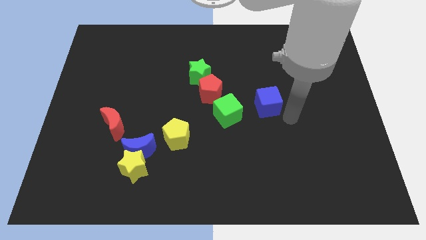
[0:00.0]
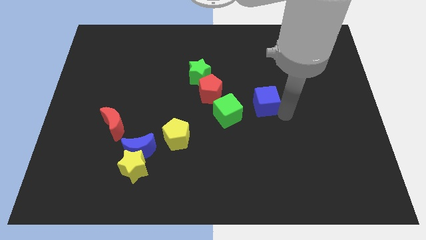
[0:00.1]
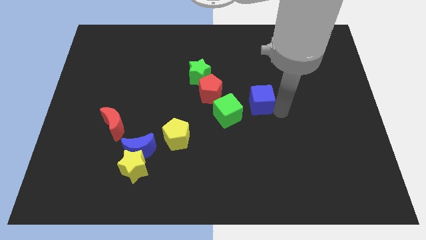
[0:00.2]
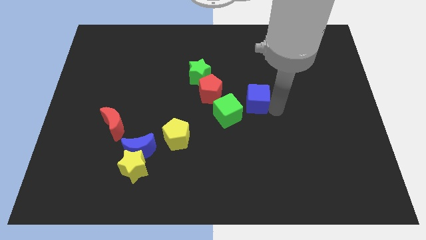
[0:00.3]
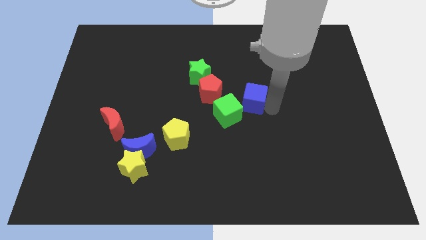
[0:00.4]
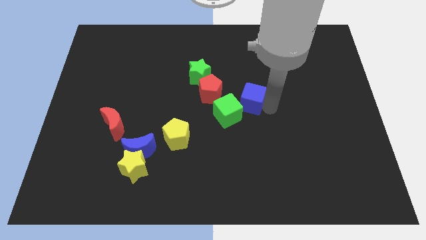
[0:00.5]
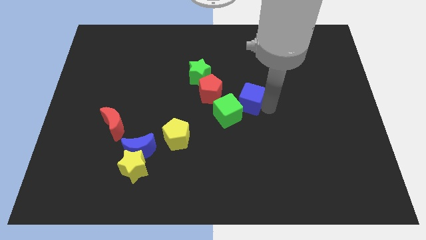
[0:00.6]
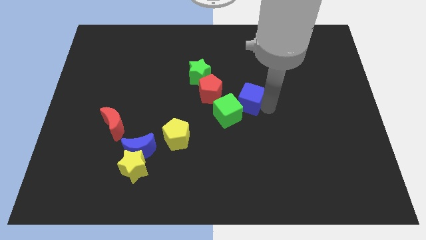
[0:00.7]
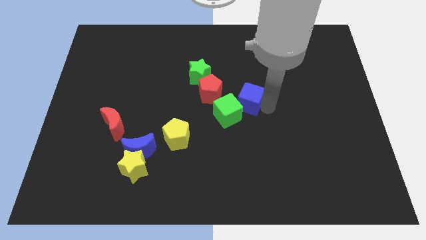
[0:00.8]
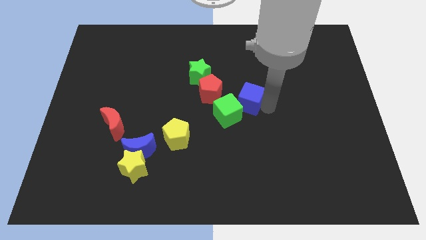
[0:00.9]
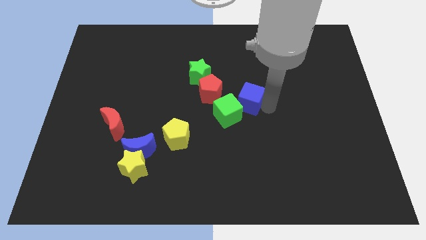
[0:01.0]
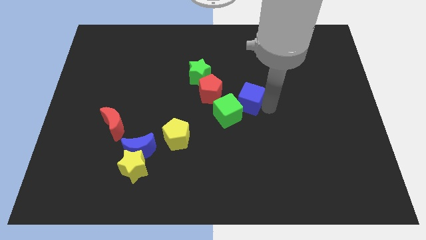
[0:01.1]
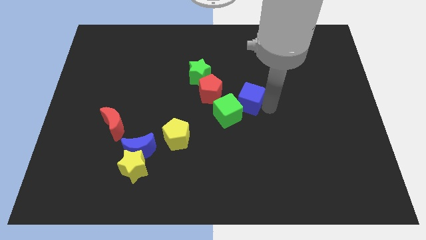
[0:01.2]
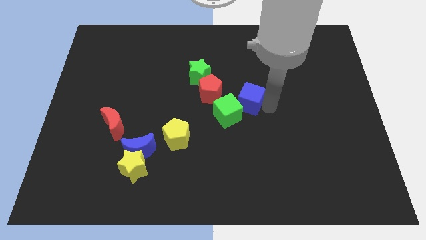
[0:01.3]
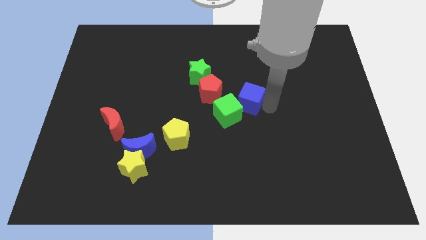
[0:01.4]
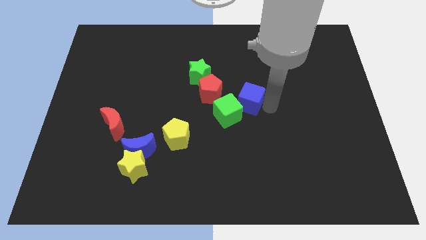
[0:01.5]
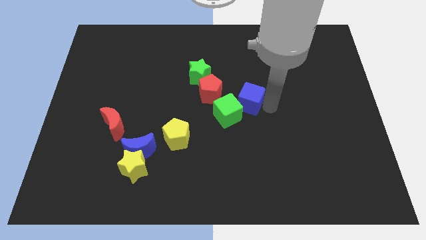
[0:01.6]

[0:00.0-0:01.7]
place the blue cube close to the green cube

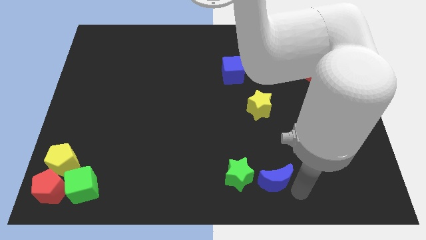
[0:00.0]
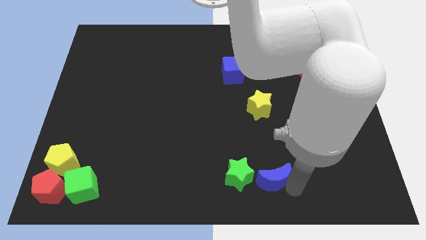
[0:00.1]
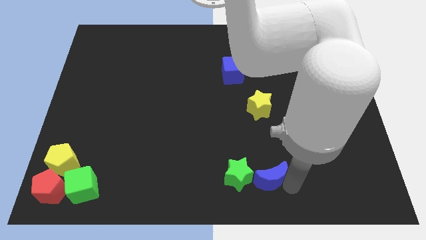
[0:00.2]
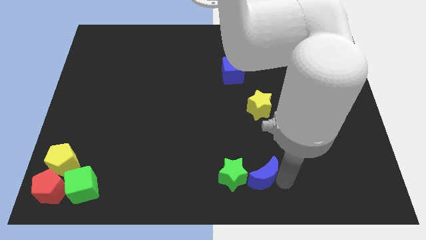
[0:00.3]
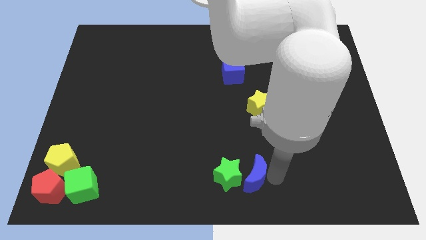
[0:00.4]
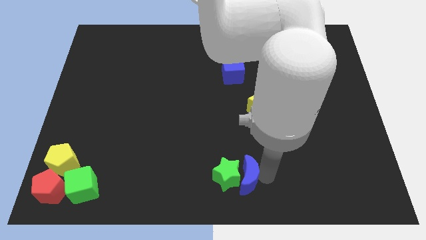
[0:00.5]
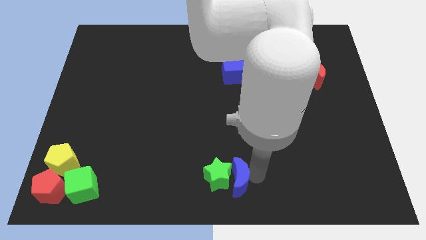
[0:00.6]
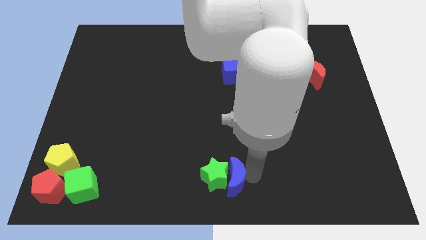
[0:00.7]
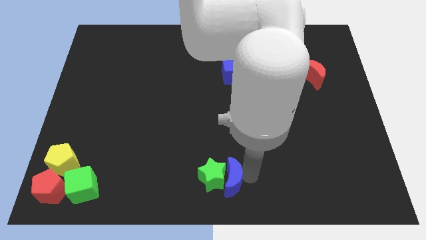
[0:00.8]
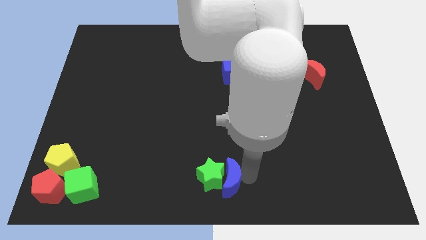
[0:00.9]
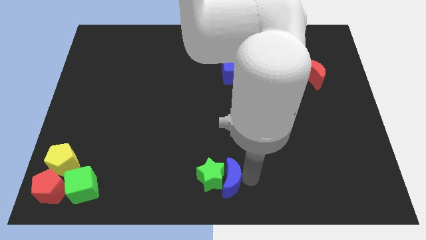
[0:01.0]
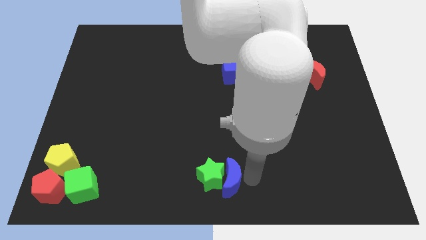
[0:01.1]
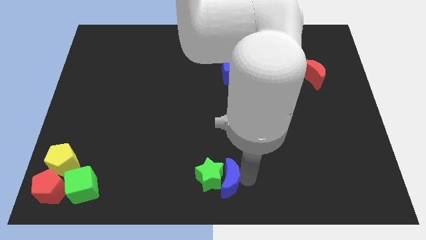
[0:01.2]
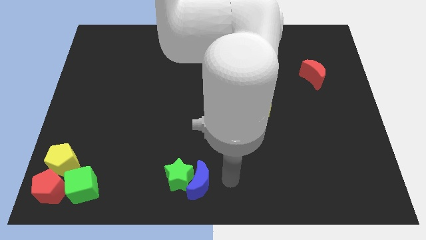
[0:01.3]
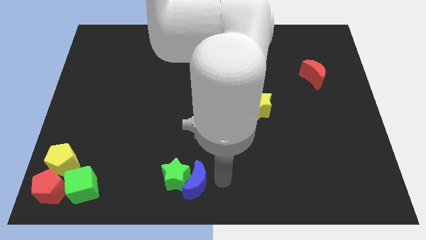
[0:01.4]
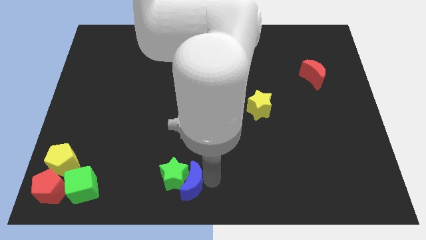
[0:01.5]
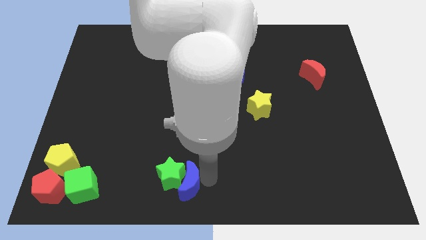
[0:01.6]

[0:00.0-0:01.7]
move the blue crescent along with the green star towards the group of blocks

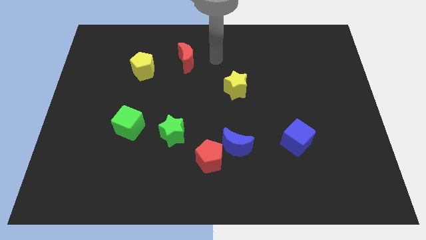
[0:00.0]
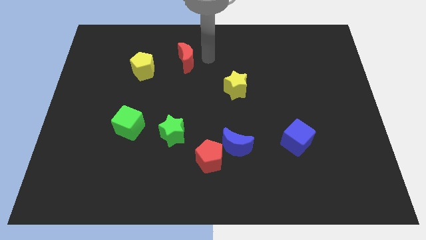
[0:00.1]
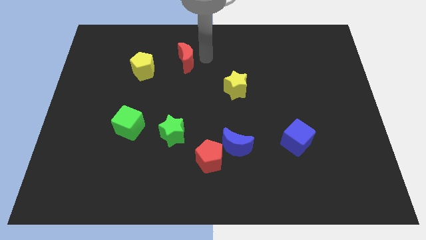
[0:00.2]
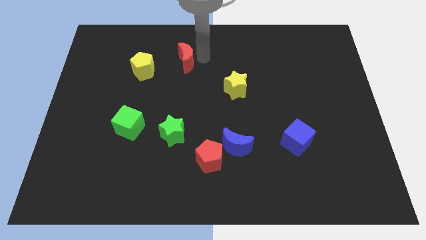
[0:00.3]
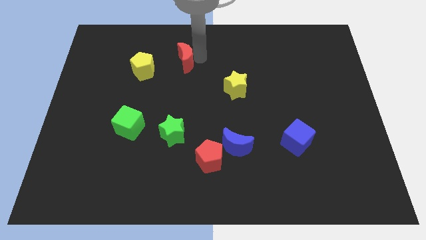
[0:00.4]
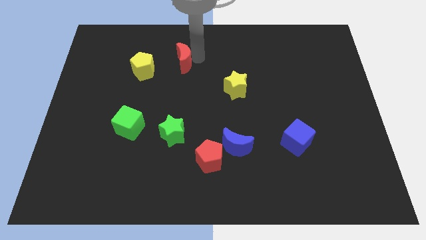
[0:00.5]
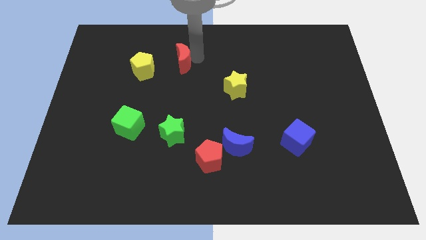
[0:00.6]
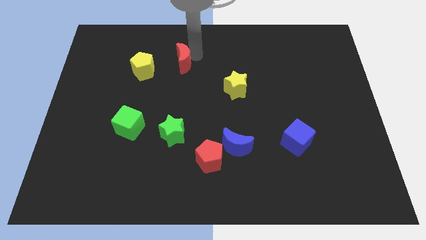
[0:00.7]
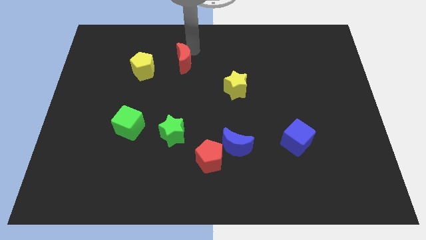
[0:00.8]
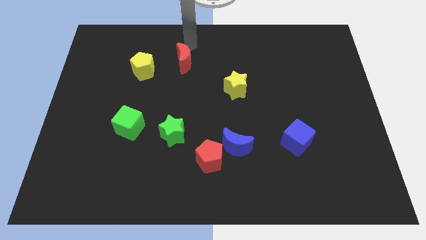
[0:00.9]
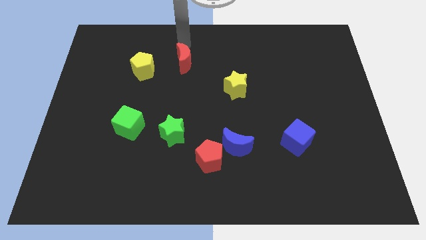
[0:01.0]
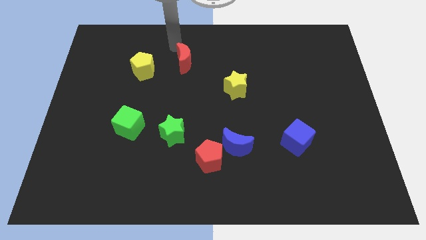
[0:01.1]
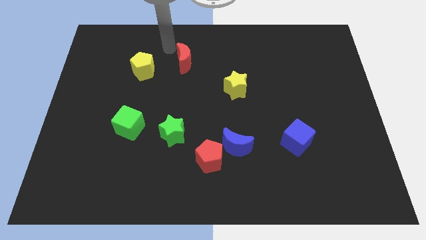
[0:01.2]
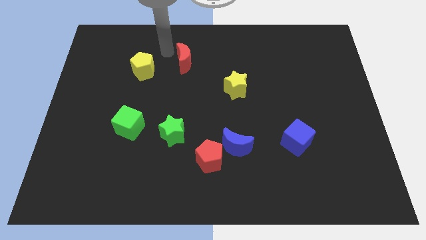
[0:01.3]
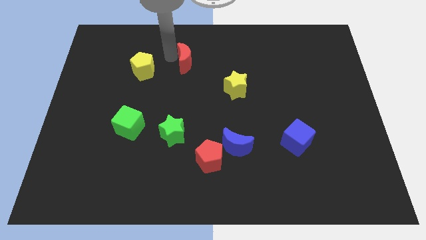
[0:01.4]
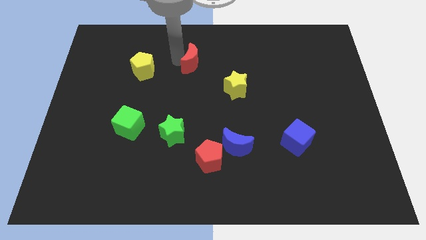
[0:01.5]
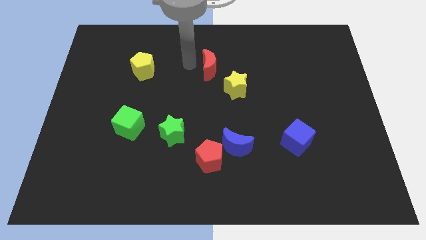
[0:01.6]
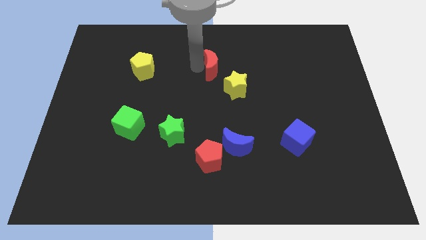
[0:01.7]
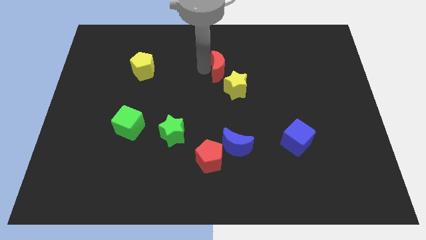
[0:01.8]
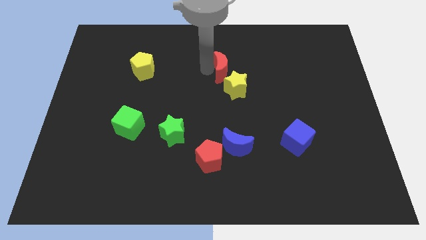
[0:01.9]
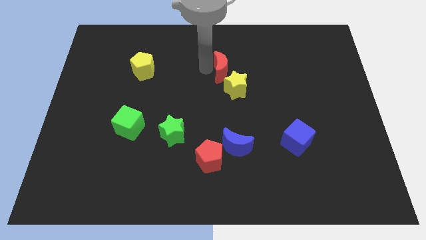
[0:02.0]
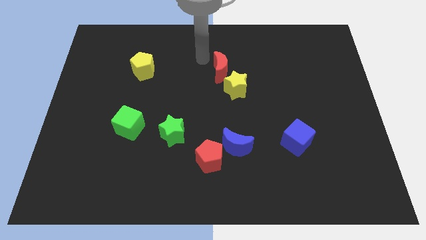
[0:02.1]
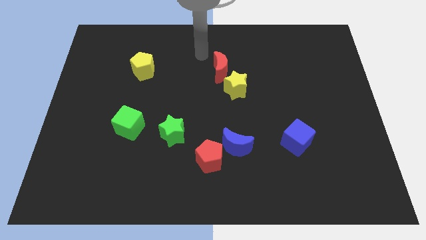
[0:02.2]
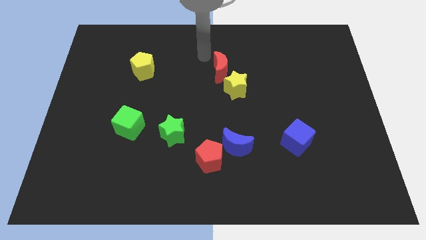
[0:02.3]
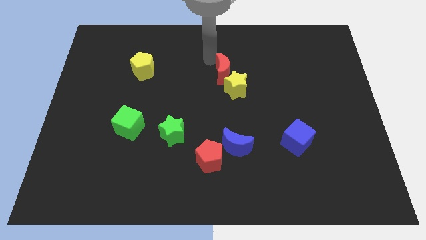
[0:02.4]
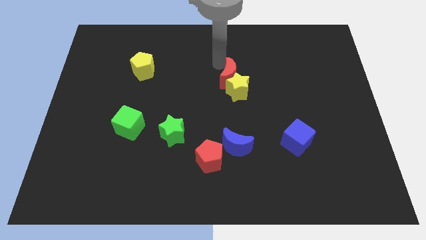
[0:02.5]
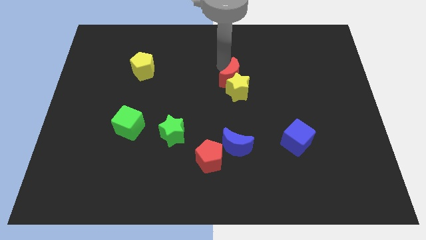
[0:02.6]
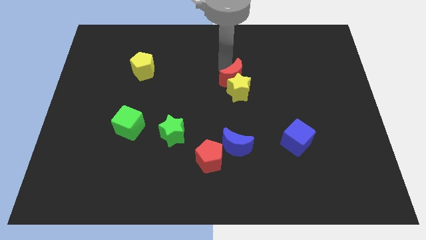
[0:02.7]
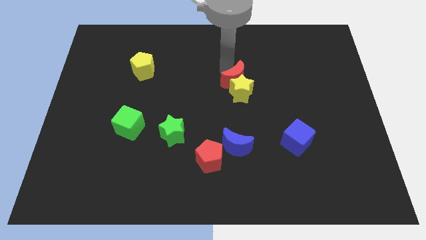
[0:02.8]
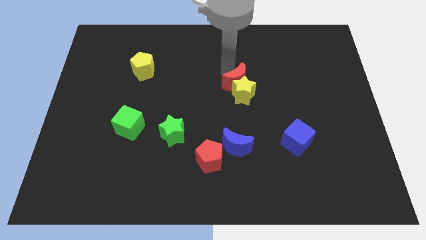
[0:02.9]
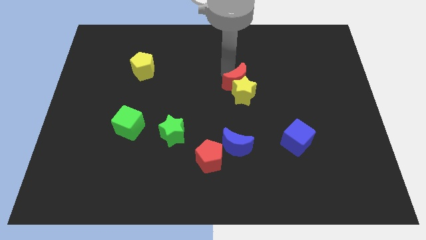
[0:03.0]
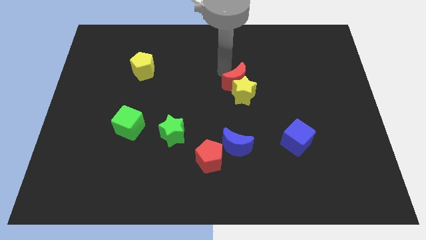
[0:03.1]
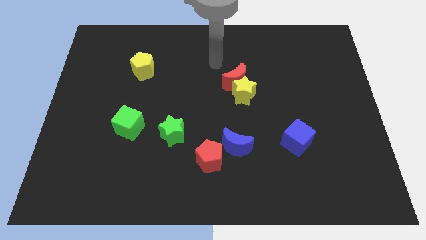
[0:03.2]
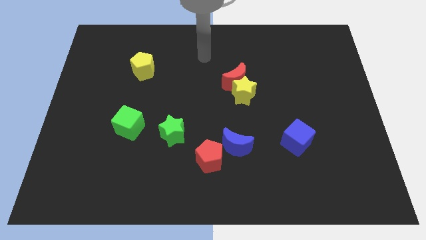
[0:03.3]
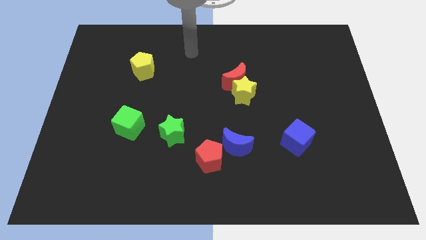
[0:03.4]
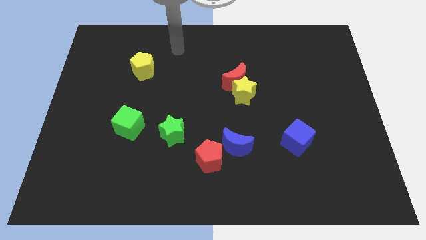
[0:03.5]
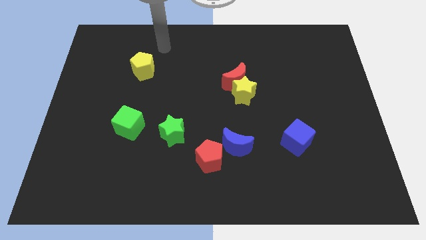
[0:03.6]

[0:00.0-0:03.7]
push the red moon into yellow star

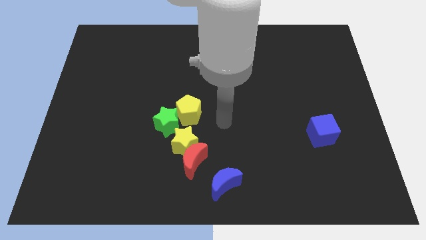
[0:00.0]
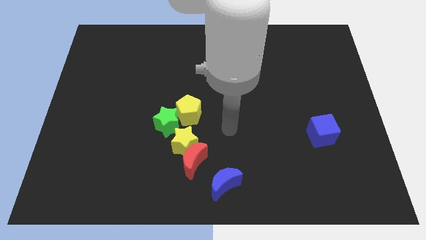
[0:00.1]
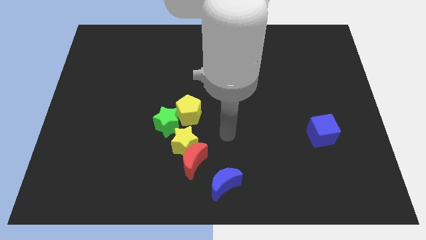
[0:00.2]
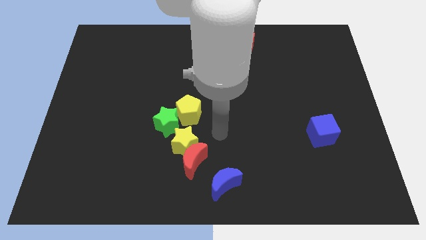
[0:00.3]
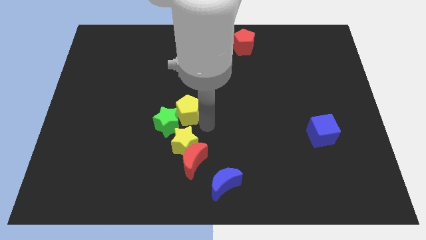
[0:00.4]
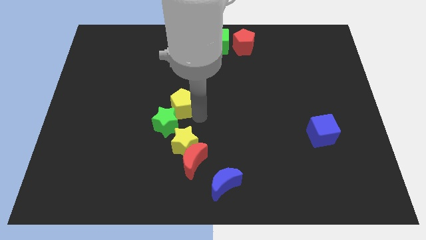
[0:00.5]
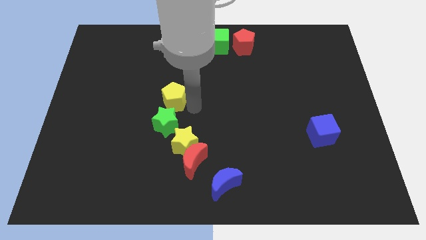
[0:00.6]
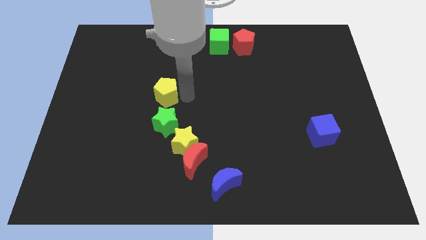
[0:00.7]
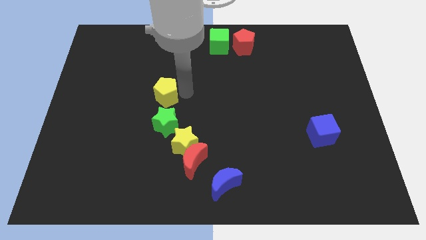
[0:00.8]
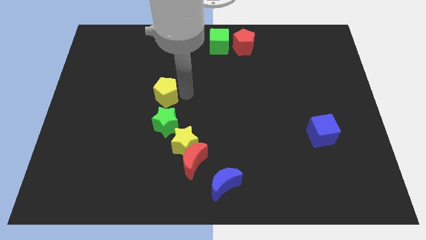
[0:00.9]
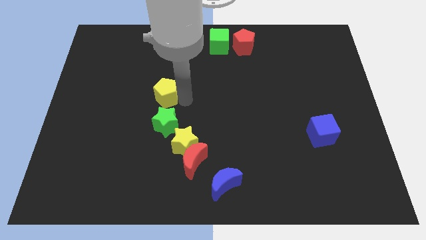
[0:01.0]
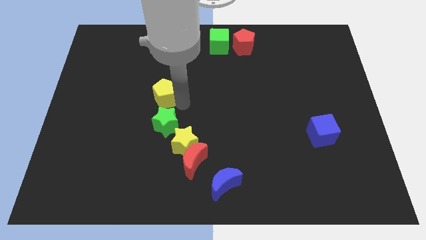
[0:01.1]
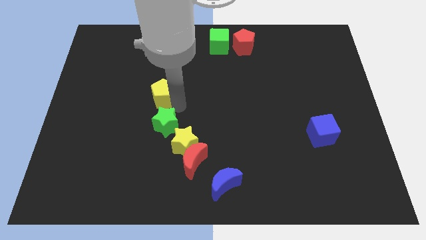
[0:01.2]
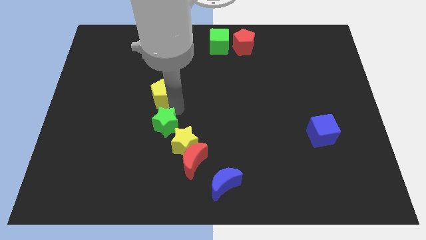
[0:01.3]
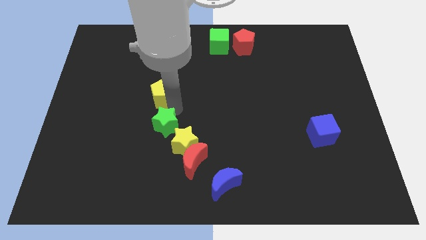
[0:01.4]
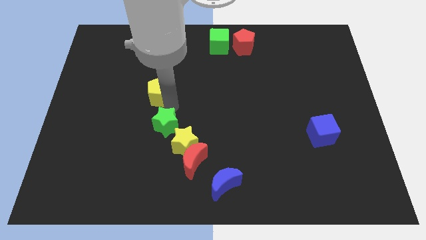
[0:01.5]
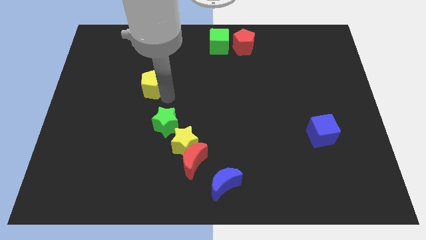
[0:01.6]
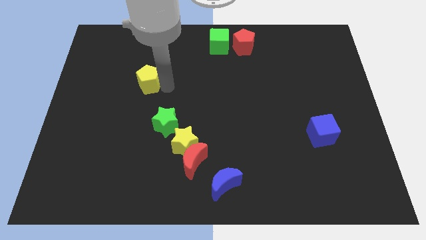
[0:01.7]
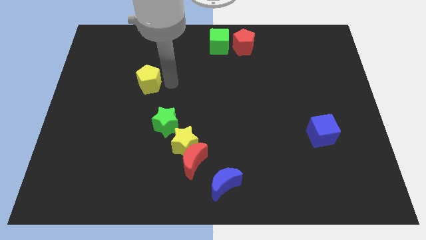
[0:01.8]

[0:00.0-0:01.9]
move the yellow pentagon slightly to the top of green star
